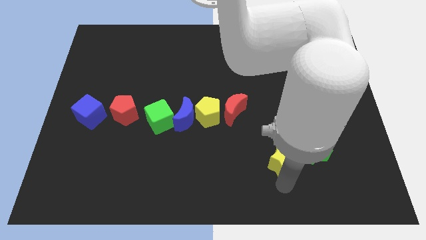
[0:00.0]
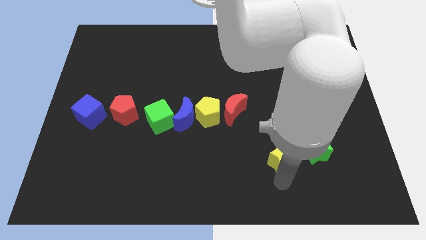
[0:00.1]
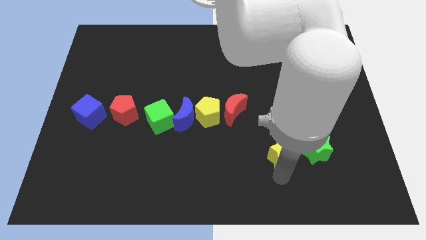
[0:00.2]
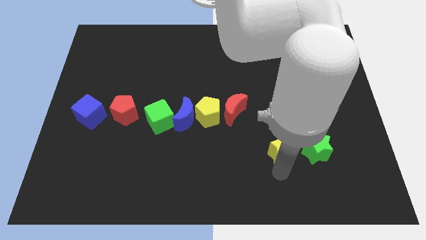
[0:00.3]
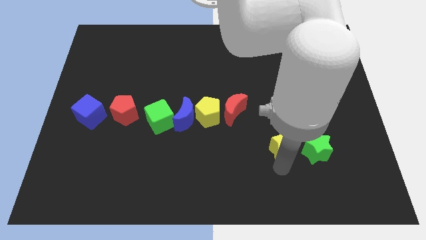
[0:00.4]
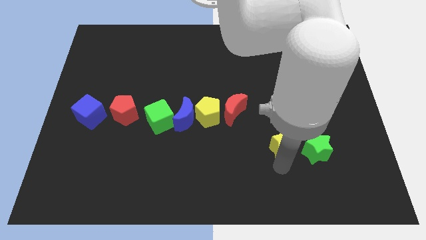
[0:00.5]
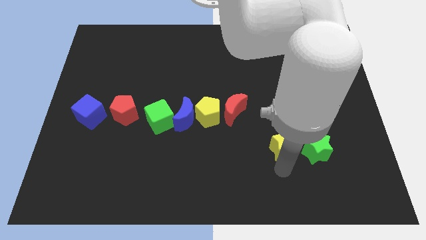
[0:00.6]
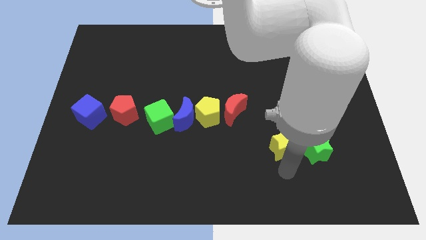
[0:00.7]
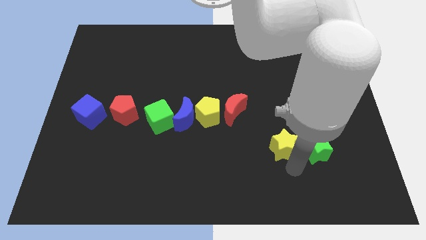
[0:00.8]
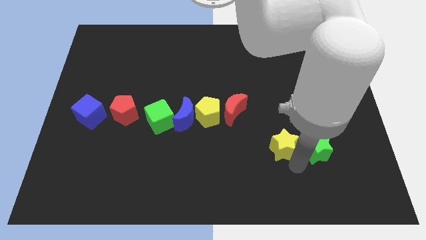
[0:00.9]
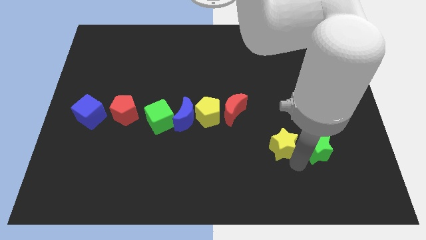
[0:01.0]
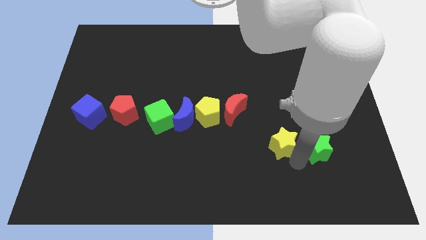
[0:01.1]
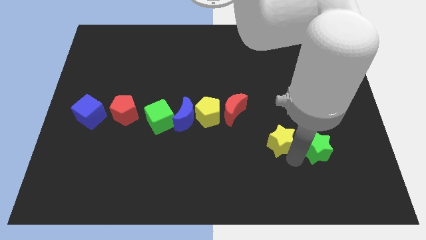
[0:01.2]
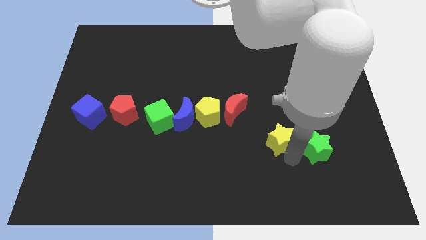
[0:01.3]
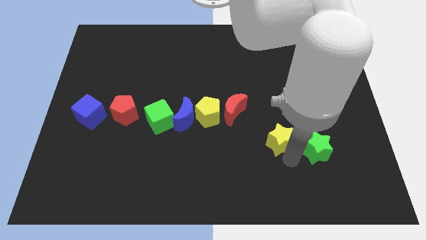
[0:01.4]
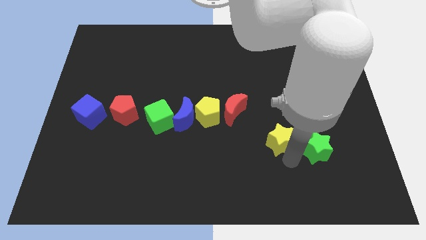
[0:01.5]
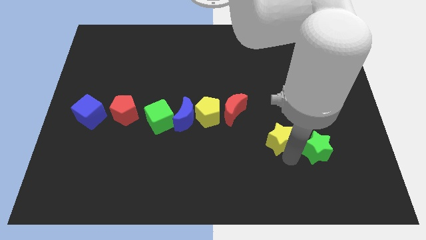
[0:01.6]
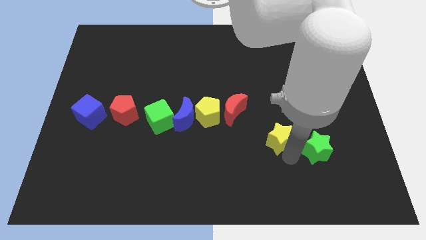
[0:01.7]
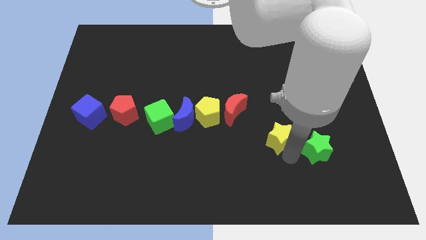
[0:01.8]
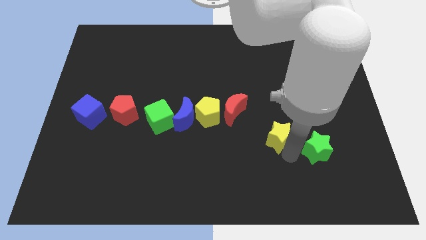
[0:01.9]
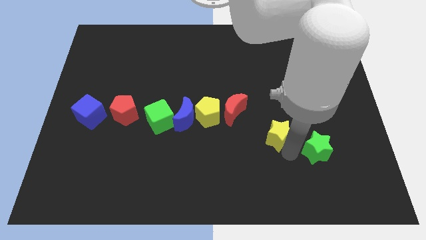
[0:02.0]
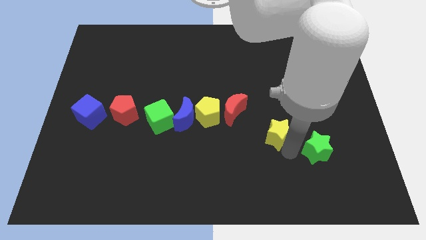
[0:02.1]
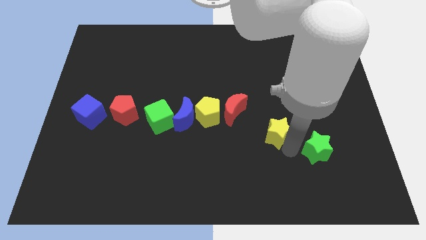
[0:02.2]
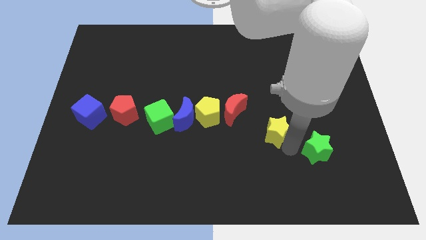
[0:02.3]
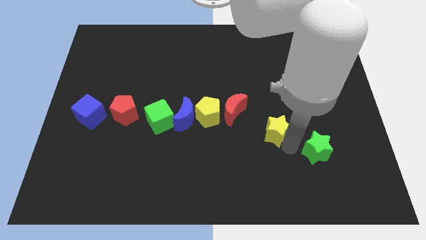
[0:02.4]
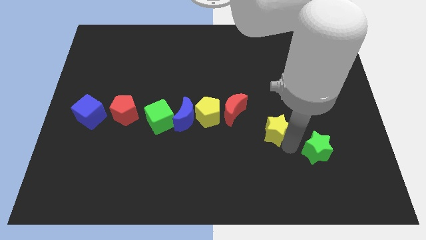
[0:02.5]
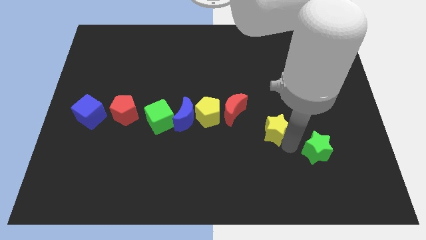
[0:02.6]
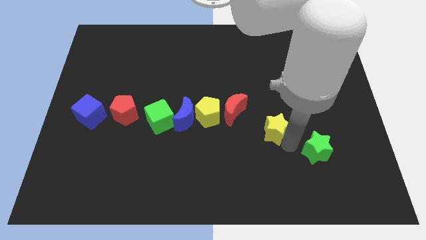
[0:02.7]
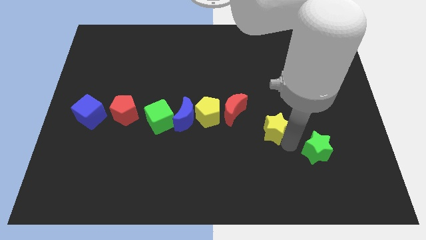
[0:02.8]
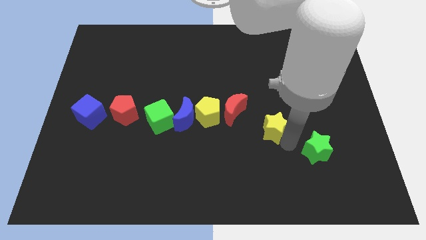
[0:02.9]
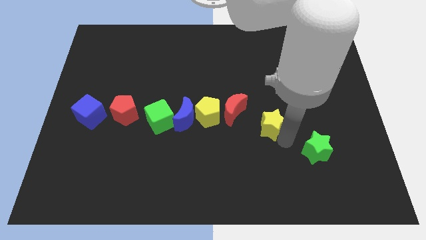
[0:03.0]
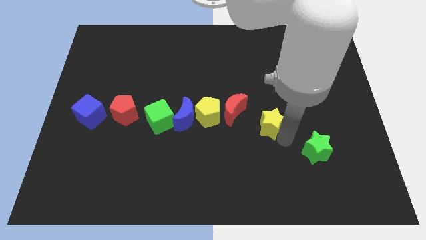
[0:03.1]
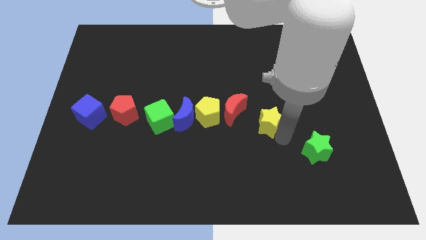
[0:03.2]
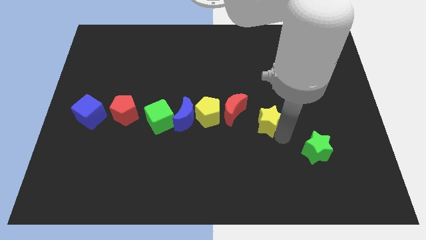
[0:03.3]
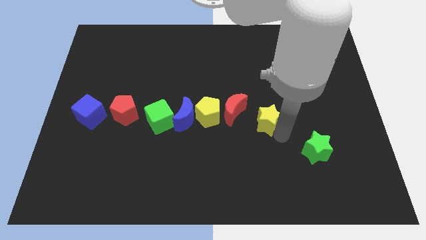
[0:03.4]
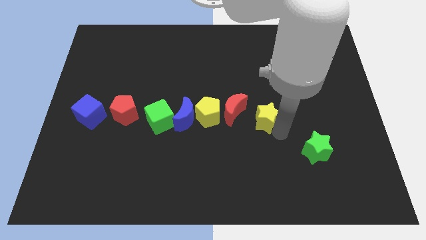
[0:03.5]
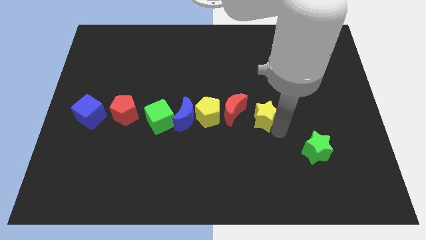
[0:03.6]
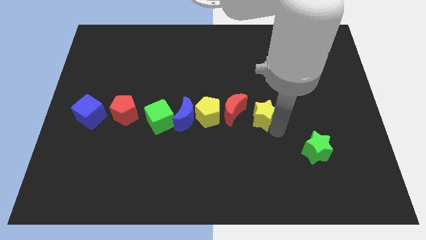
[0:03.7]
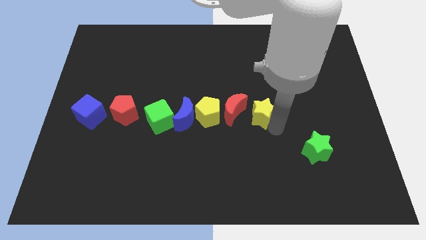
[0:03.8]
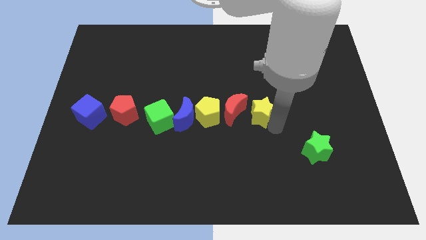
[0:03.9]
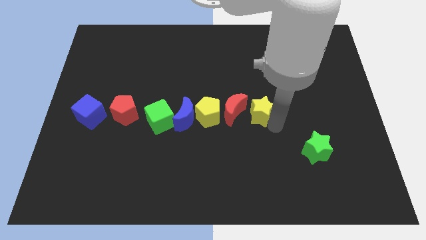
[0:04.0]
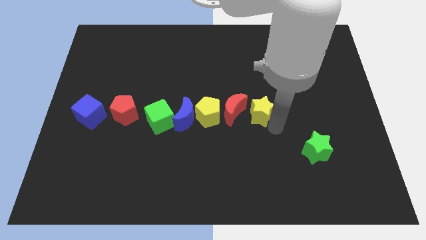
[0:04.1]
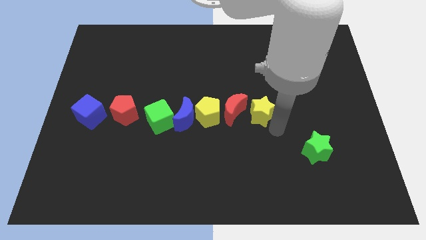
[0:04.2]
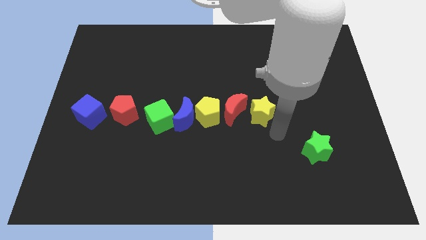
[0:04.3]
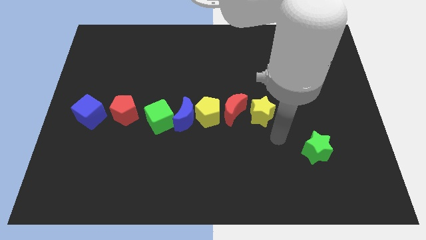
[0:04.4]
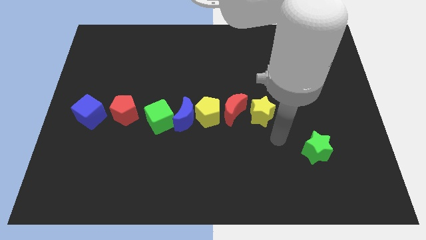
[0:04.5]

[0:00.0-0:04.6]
place yellow star beside red moon

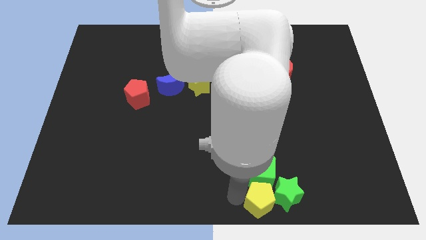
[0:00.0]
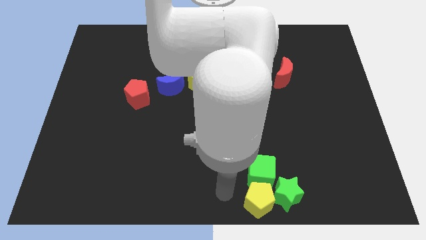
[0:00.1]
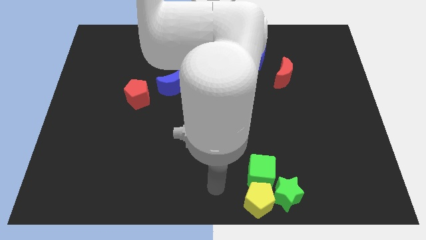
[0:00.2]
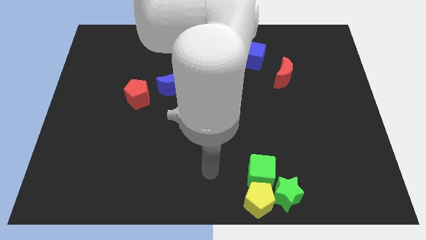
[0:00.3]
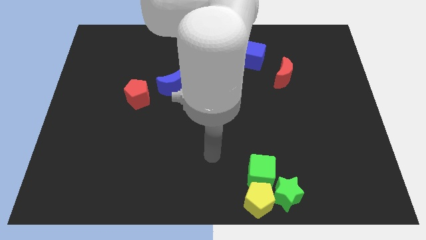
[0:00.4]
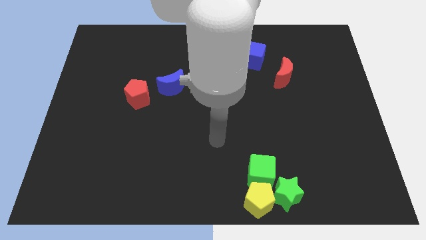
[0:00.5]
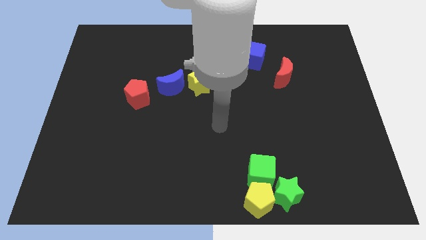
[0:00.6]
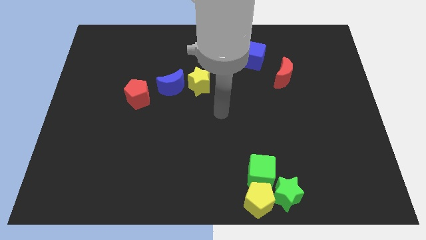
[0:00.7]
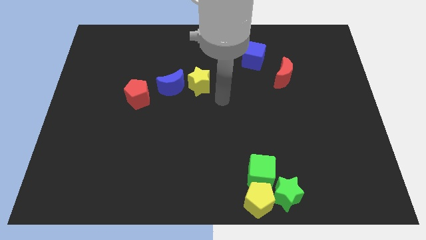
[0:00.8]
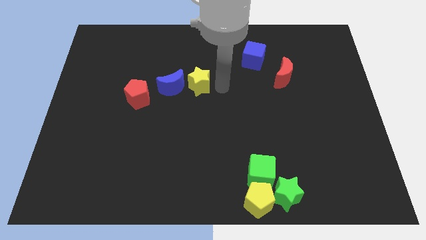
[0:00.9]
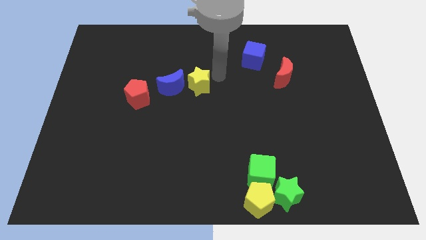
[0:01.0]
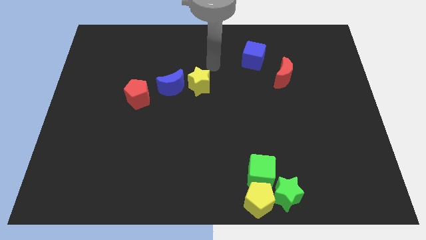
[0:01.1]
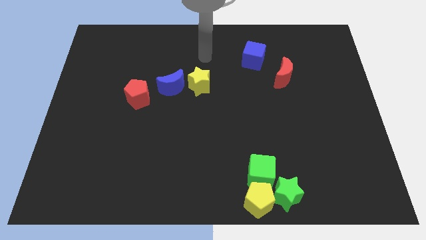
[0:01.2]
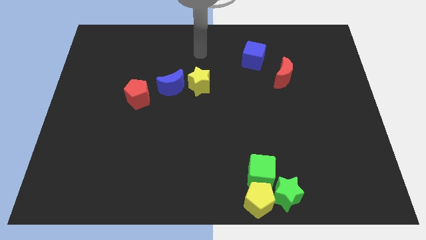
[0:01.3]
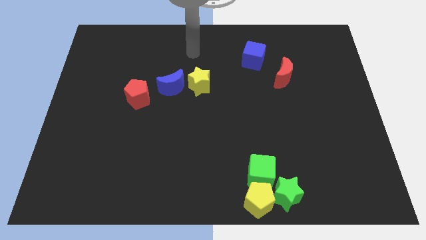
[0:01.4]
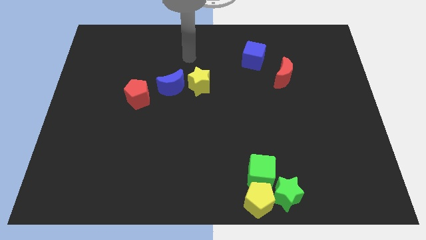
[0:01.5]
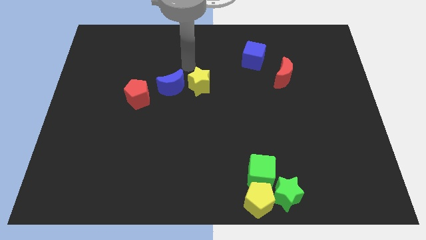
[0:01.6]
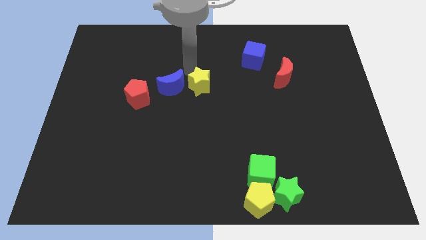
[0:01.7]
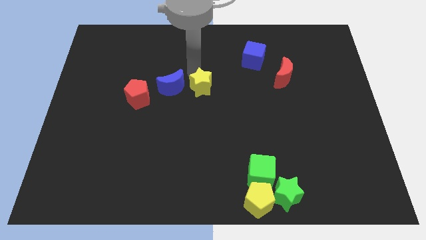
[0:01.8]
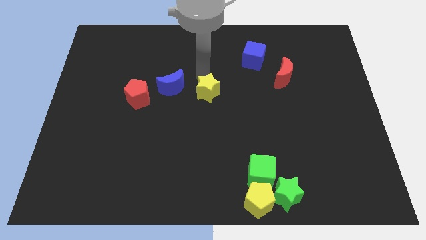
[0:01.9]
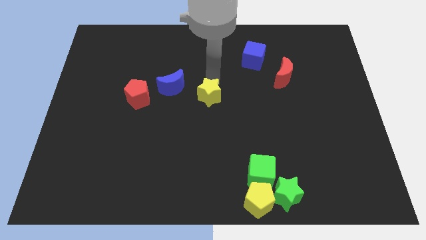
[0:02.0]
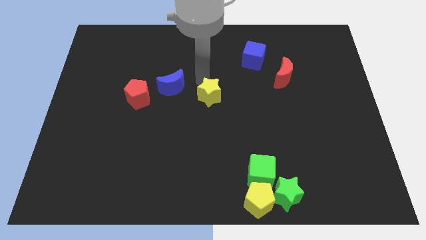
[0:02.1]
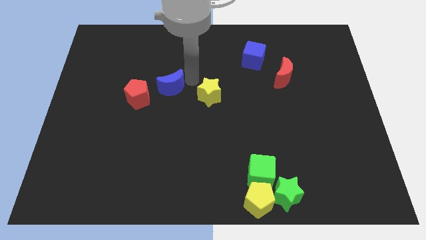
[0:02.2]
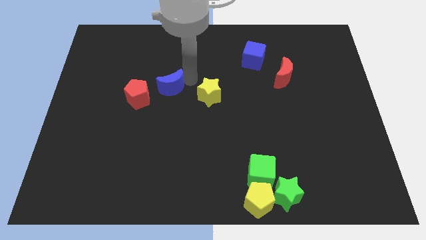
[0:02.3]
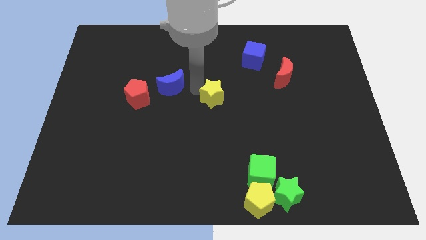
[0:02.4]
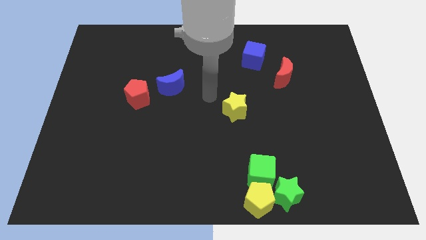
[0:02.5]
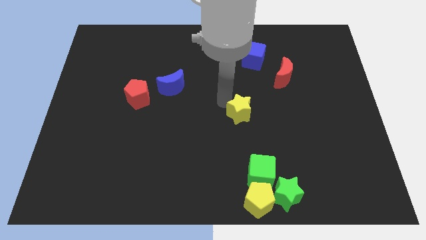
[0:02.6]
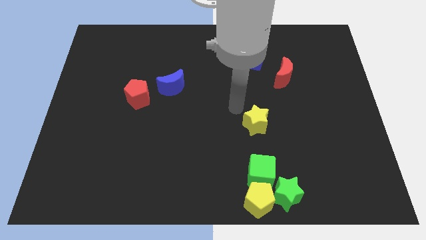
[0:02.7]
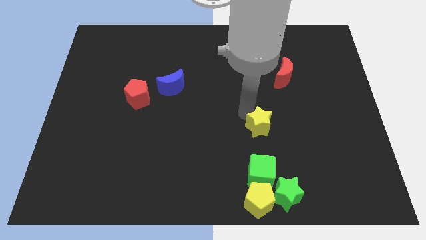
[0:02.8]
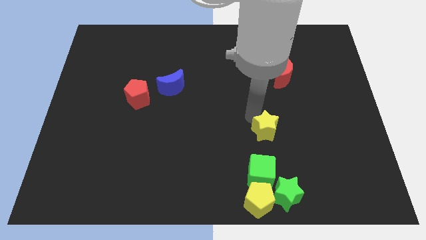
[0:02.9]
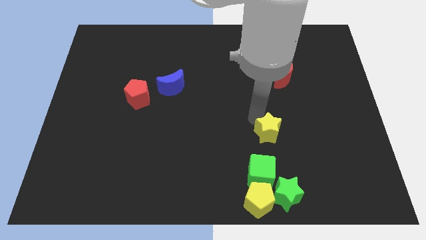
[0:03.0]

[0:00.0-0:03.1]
push the yellow star to the top side of the green cube

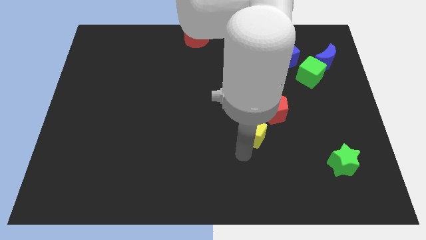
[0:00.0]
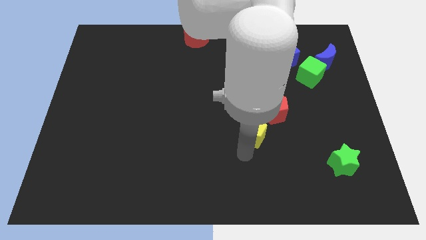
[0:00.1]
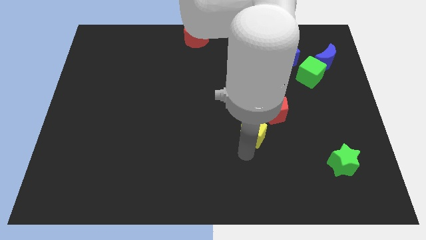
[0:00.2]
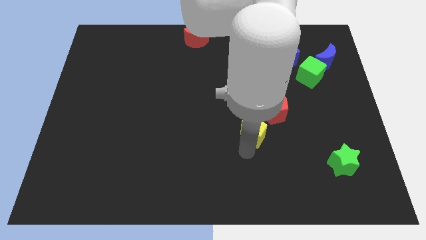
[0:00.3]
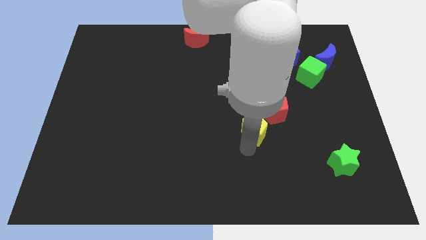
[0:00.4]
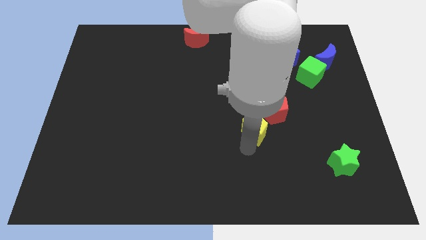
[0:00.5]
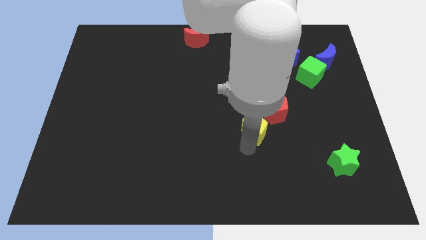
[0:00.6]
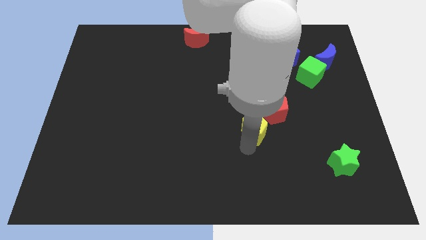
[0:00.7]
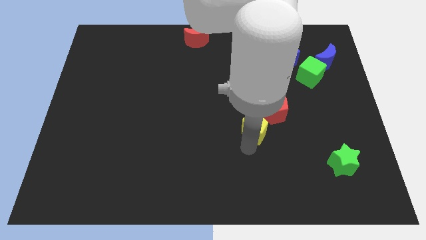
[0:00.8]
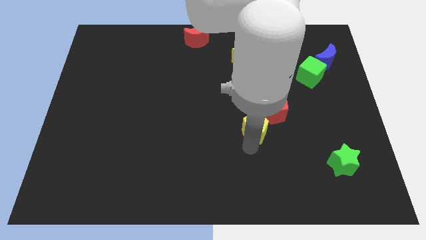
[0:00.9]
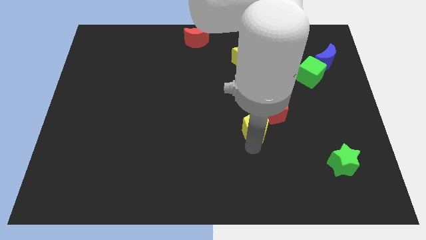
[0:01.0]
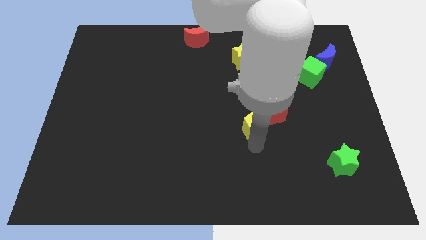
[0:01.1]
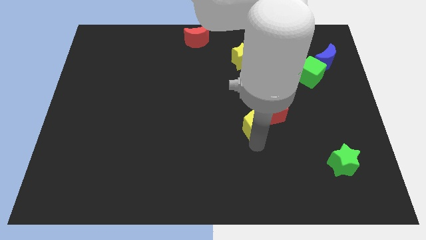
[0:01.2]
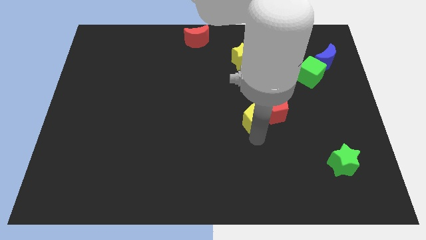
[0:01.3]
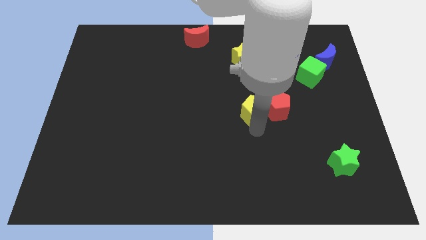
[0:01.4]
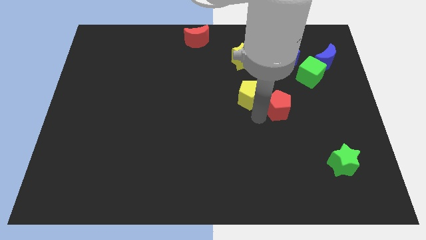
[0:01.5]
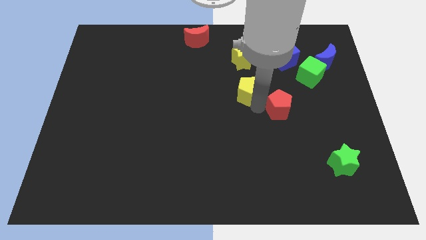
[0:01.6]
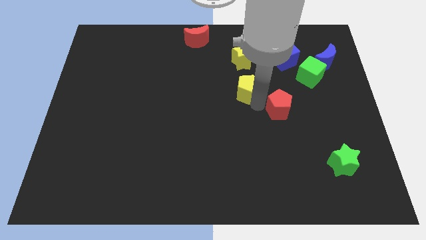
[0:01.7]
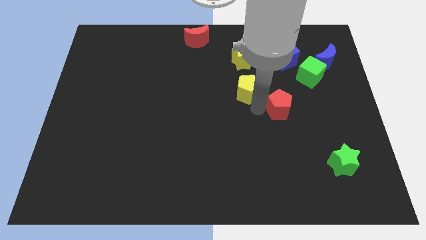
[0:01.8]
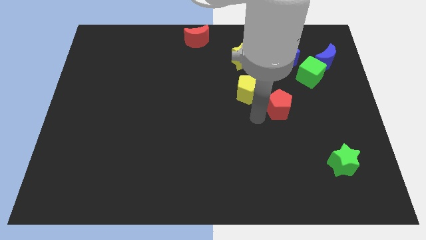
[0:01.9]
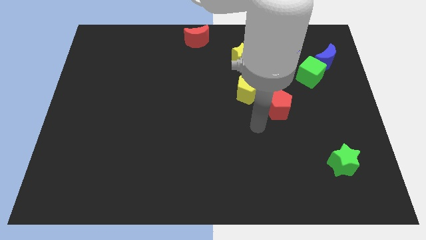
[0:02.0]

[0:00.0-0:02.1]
move the yellow pentagon towards the yellow star
